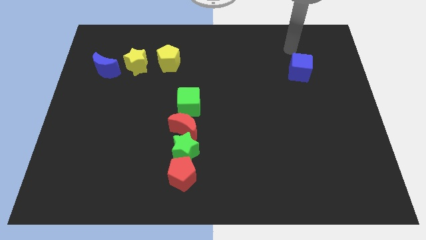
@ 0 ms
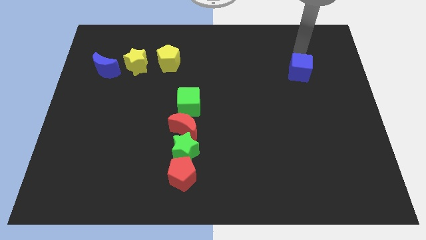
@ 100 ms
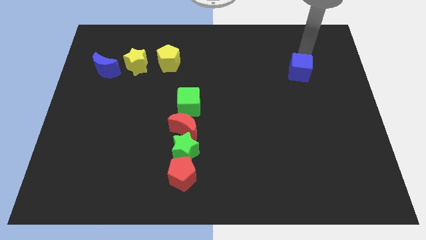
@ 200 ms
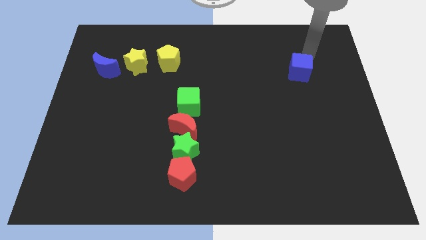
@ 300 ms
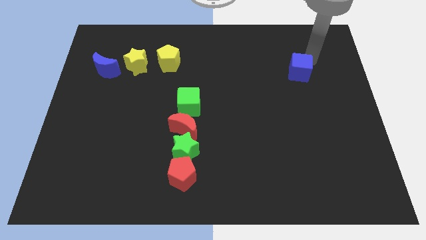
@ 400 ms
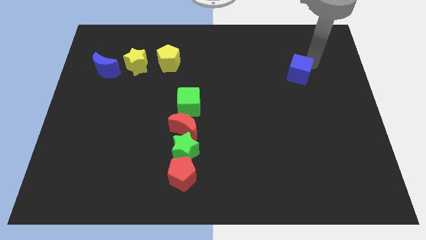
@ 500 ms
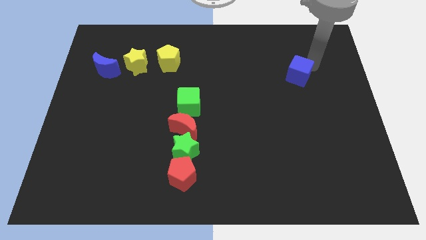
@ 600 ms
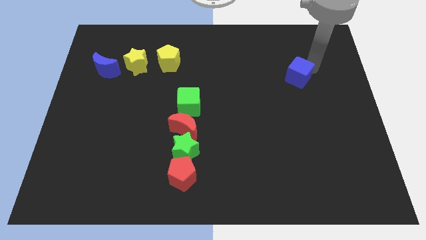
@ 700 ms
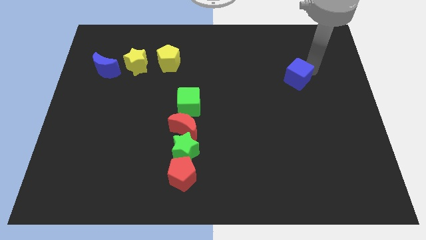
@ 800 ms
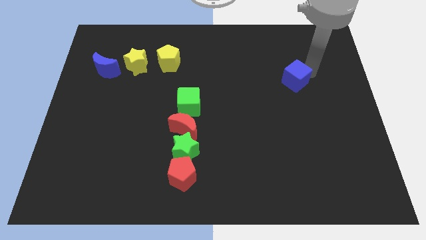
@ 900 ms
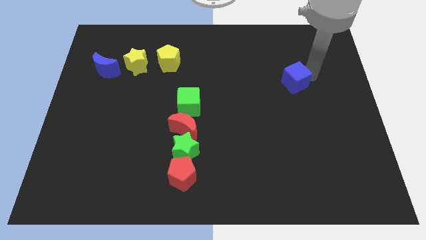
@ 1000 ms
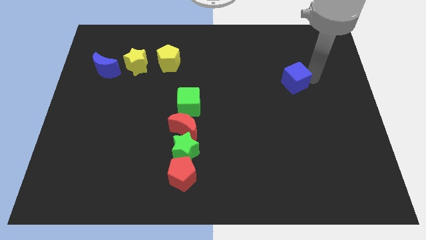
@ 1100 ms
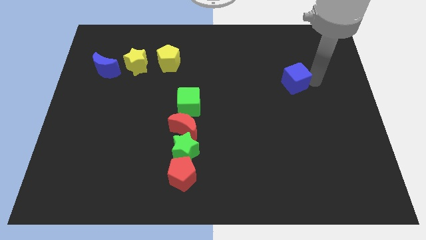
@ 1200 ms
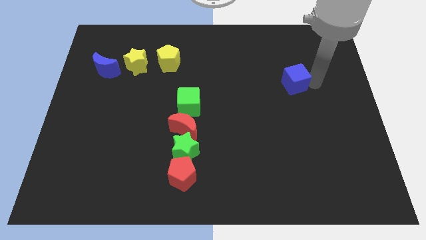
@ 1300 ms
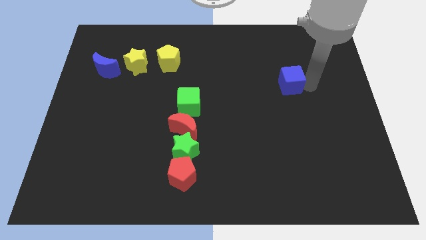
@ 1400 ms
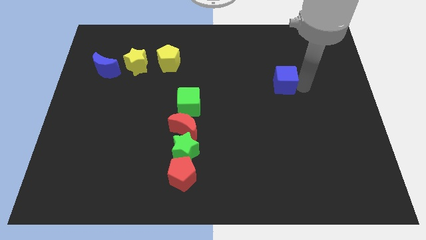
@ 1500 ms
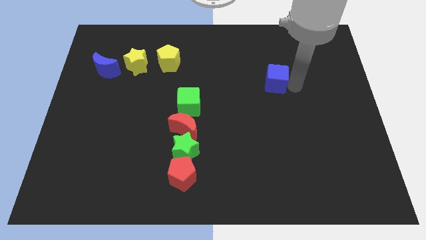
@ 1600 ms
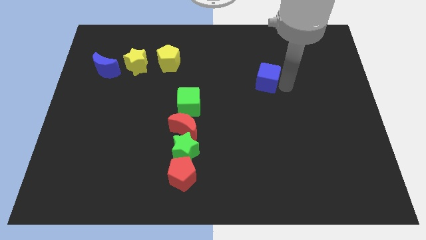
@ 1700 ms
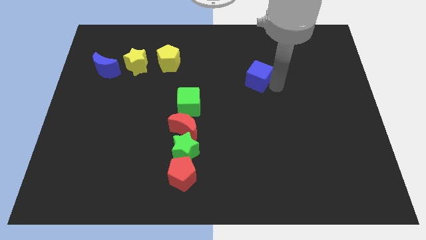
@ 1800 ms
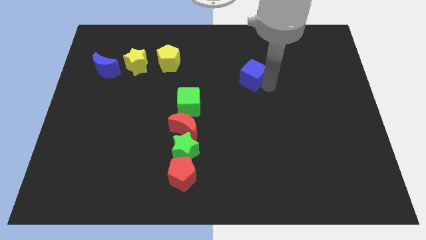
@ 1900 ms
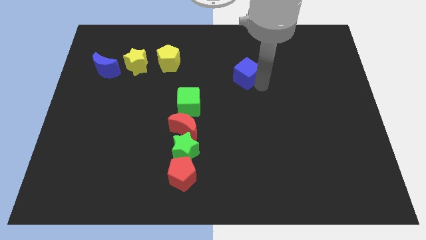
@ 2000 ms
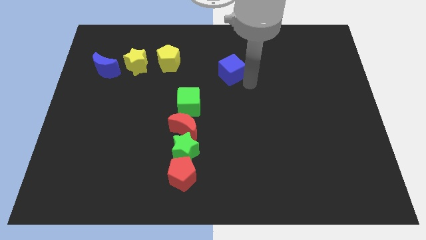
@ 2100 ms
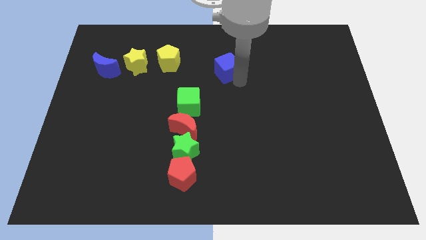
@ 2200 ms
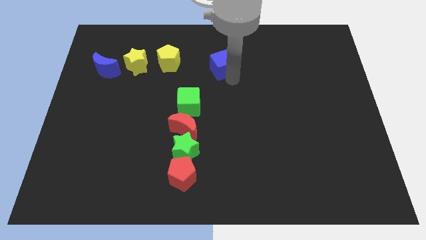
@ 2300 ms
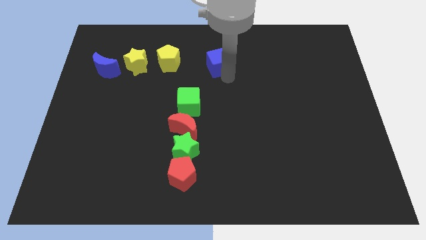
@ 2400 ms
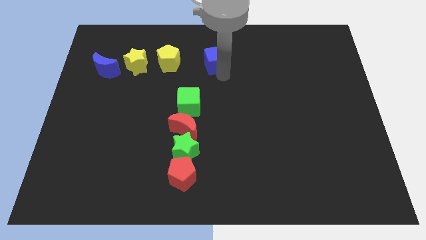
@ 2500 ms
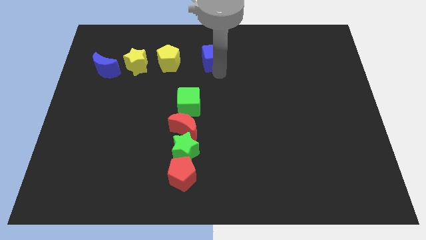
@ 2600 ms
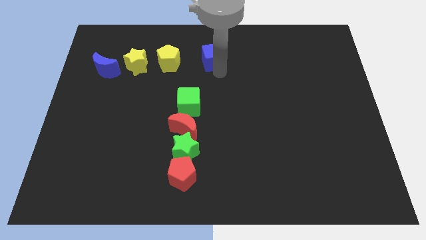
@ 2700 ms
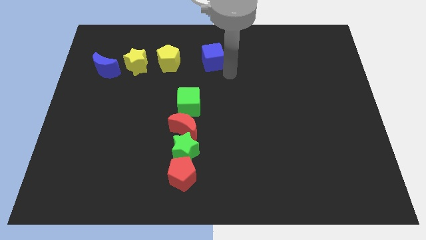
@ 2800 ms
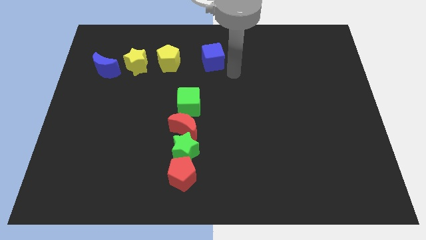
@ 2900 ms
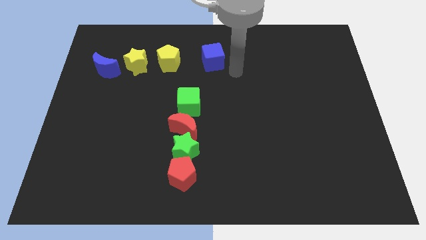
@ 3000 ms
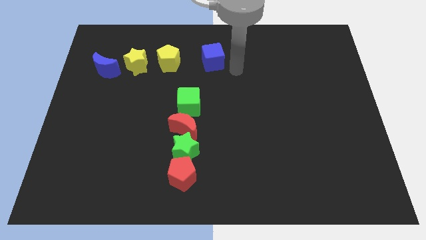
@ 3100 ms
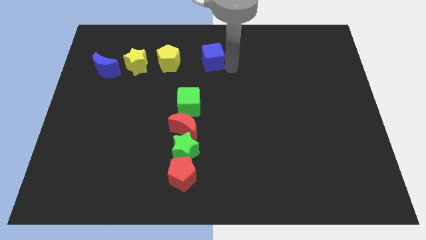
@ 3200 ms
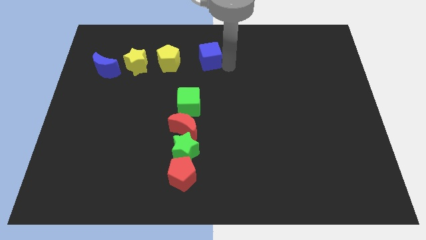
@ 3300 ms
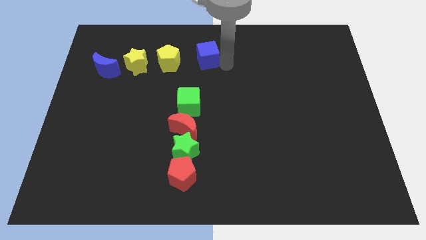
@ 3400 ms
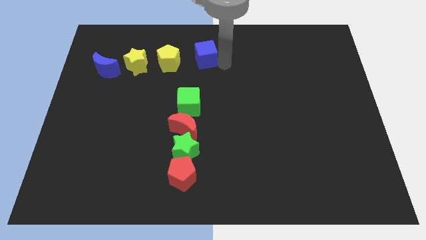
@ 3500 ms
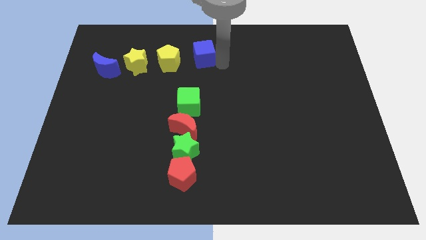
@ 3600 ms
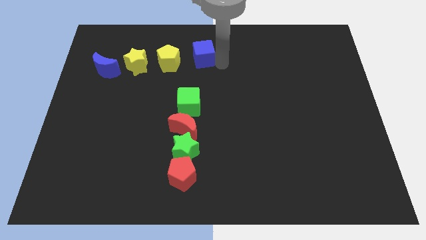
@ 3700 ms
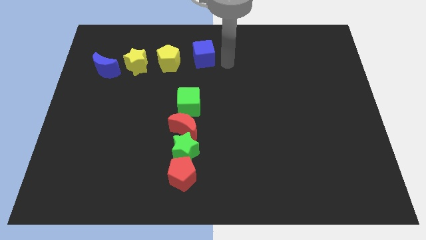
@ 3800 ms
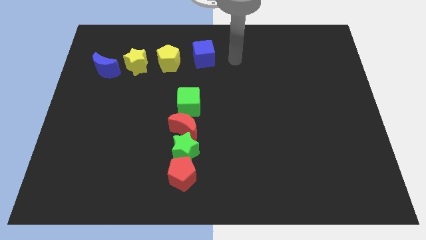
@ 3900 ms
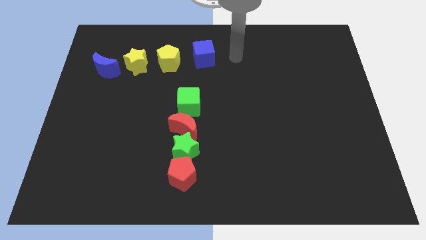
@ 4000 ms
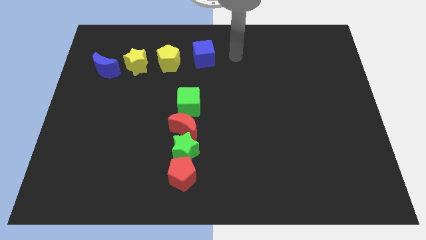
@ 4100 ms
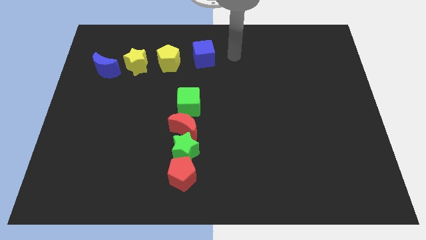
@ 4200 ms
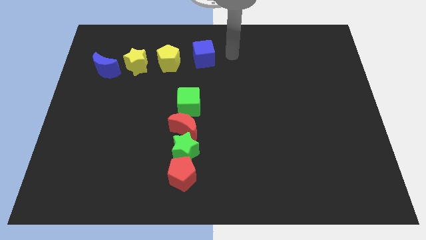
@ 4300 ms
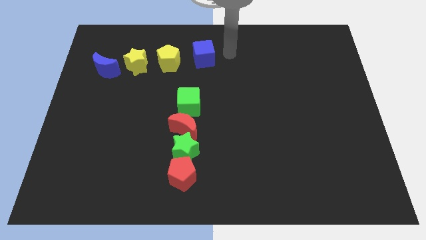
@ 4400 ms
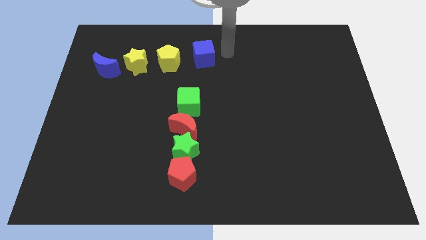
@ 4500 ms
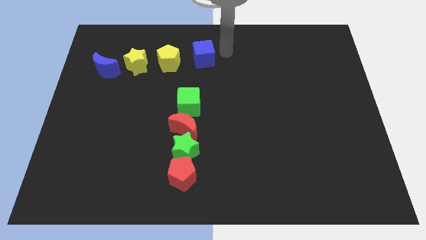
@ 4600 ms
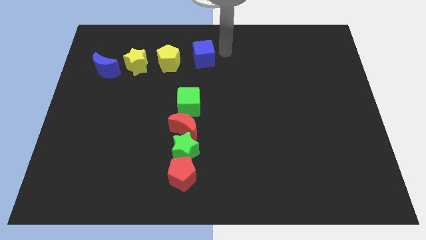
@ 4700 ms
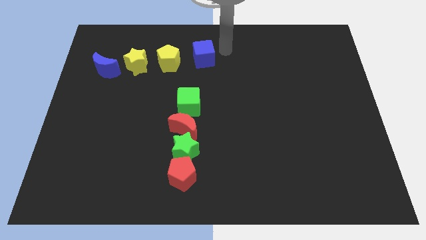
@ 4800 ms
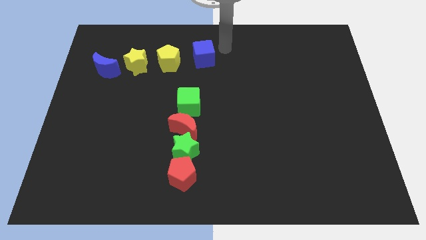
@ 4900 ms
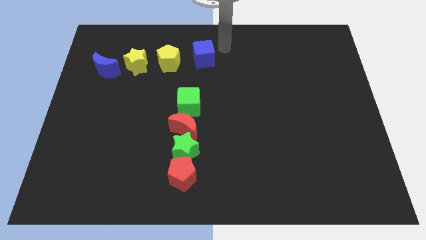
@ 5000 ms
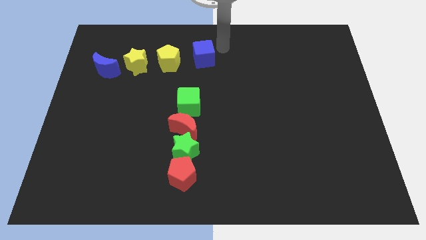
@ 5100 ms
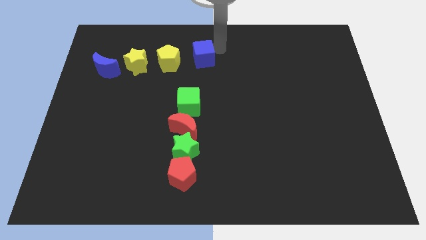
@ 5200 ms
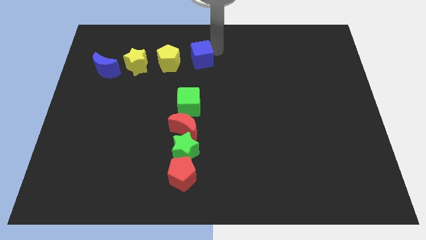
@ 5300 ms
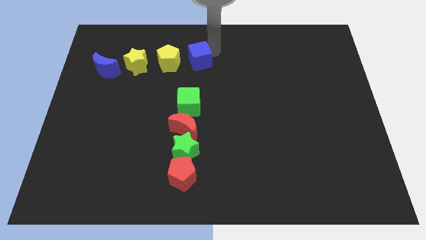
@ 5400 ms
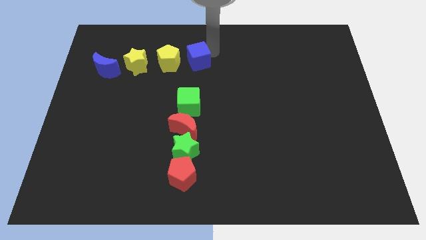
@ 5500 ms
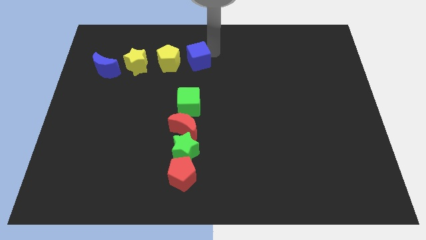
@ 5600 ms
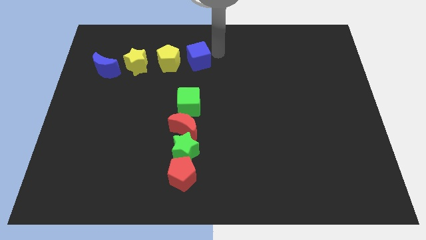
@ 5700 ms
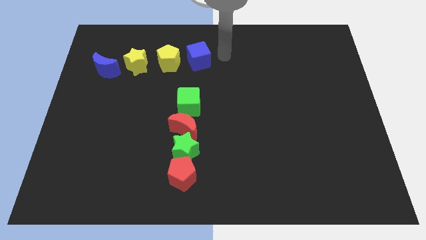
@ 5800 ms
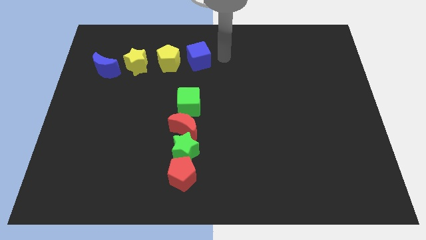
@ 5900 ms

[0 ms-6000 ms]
place blue cube to the right of yellow pentagon

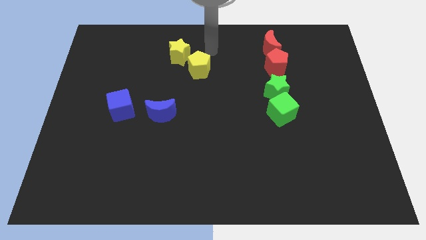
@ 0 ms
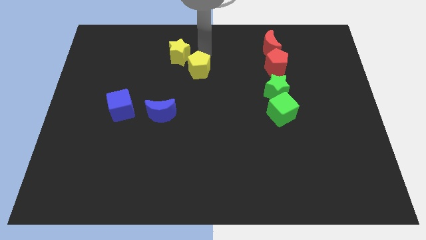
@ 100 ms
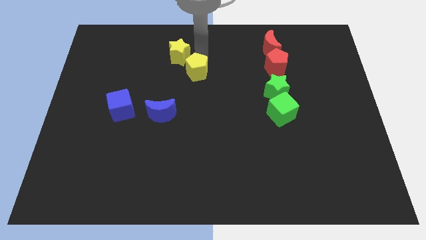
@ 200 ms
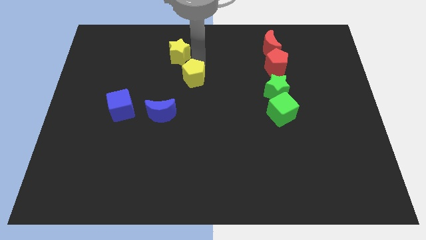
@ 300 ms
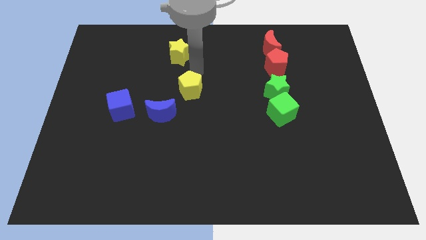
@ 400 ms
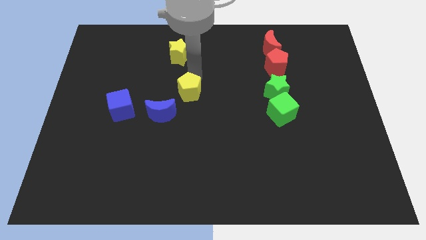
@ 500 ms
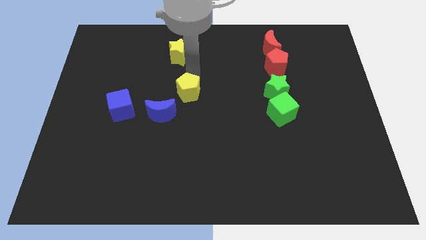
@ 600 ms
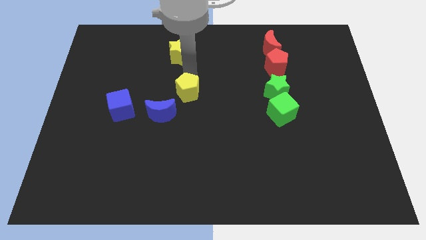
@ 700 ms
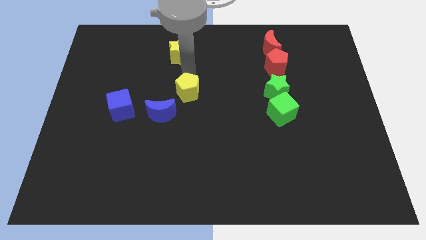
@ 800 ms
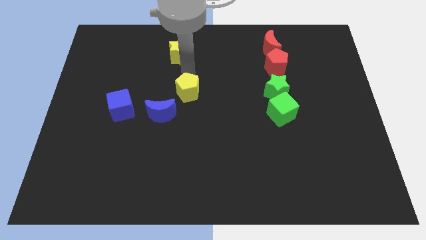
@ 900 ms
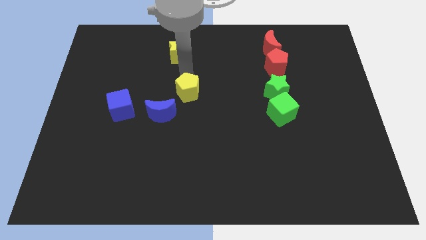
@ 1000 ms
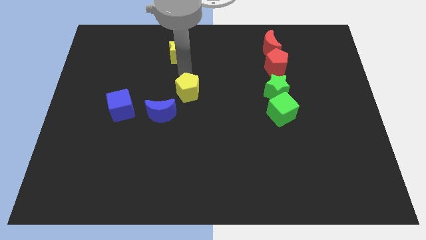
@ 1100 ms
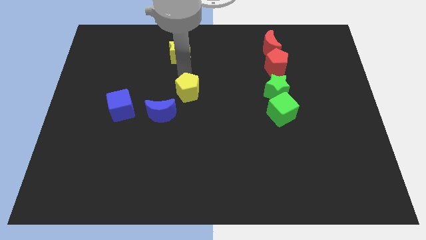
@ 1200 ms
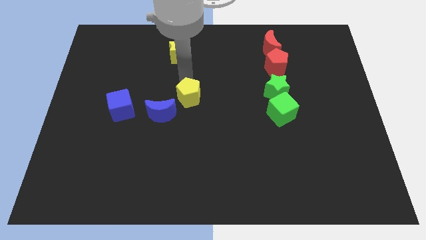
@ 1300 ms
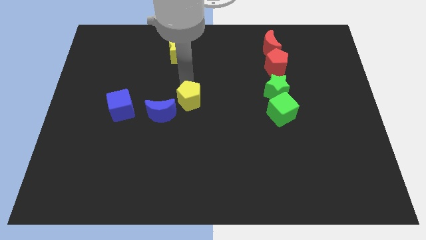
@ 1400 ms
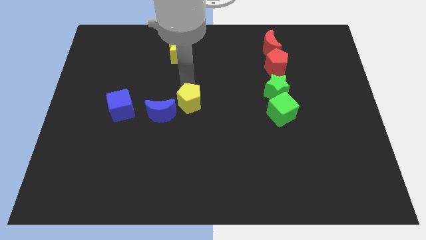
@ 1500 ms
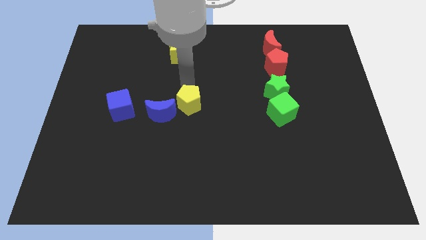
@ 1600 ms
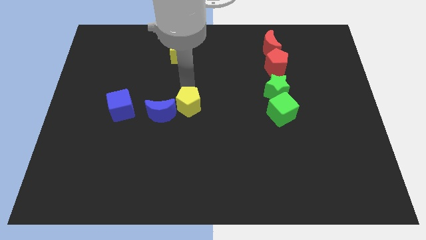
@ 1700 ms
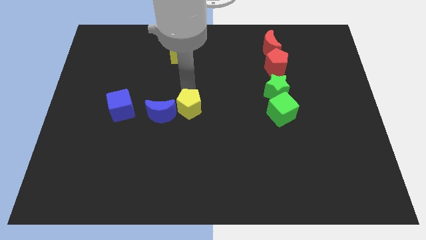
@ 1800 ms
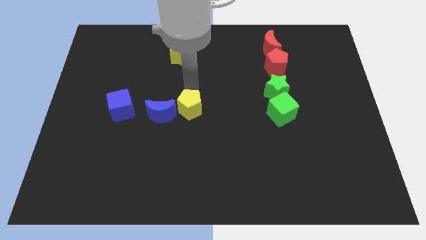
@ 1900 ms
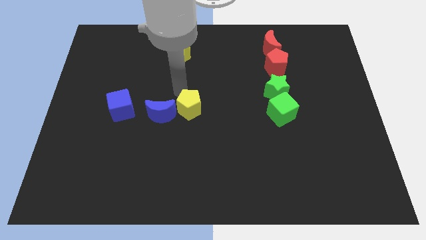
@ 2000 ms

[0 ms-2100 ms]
push the yellow pentagon to the right side of the blue moon

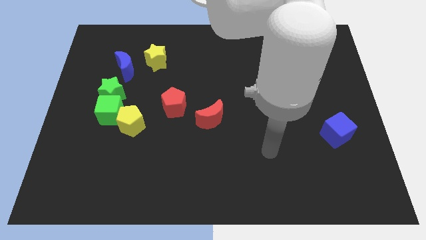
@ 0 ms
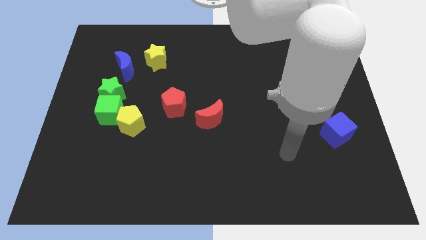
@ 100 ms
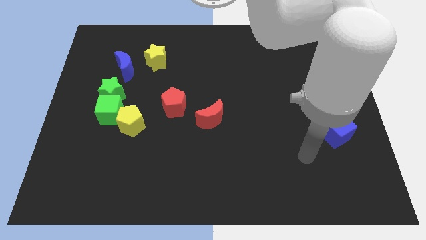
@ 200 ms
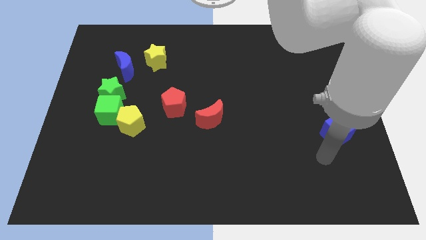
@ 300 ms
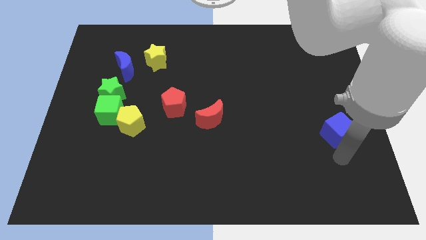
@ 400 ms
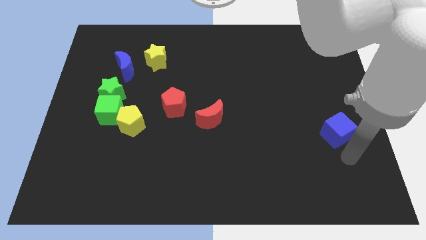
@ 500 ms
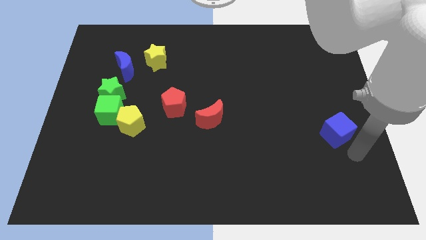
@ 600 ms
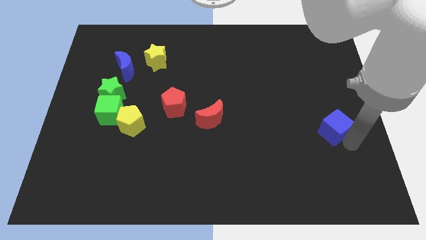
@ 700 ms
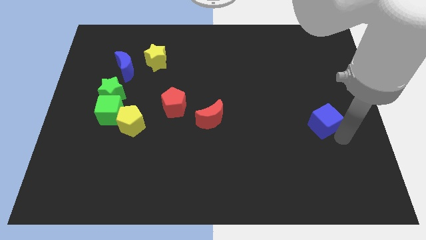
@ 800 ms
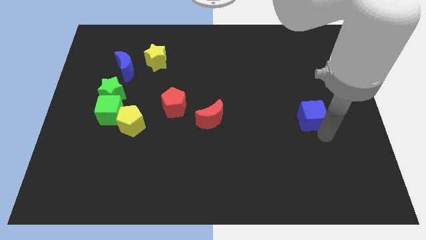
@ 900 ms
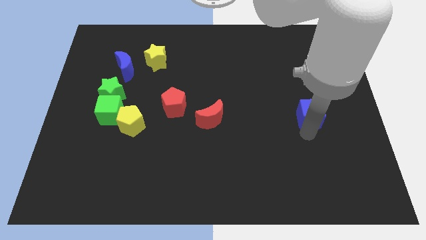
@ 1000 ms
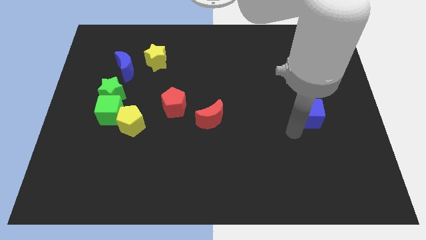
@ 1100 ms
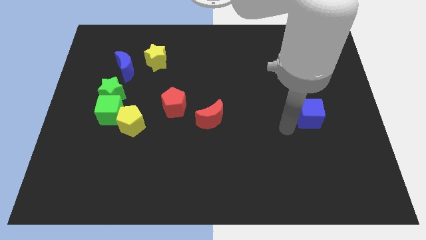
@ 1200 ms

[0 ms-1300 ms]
slightly move the blue cube up
